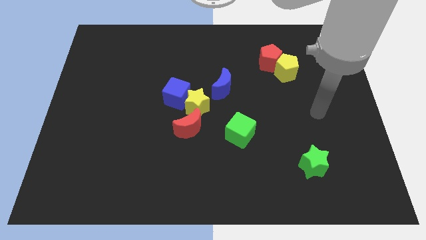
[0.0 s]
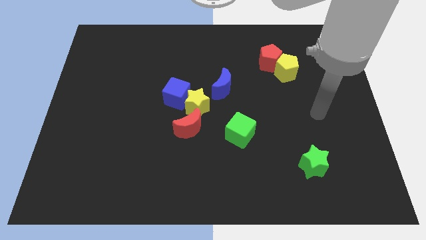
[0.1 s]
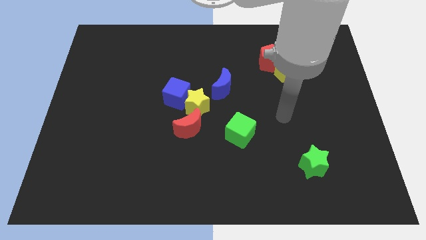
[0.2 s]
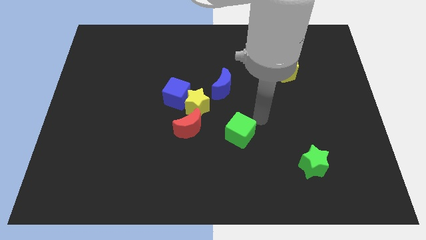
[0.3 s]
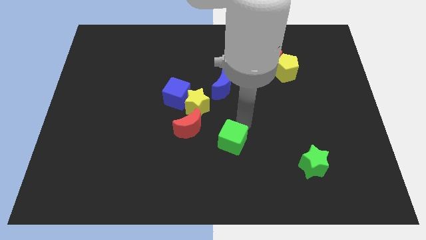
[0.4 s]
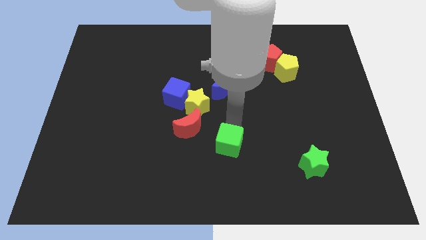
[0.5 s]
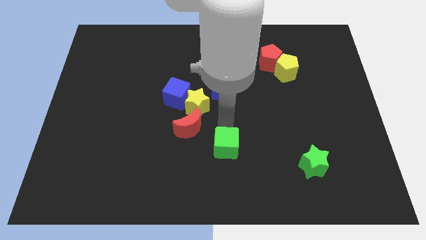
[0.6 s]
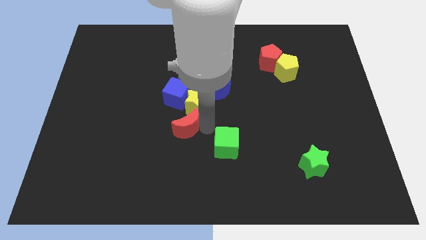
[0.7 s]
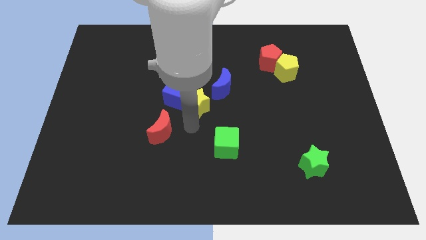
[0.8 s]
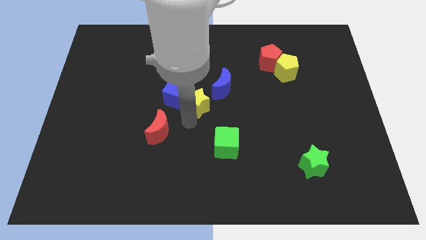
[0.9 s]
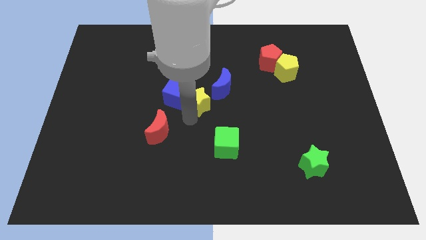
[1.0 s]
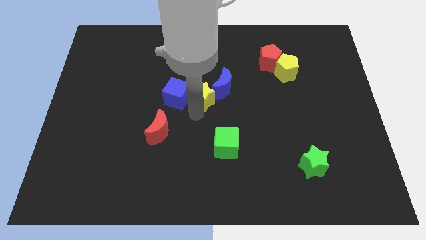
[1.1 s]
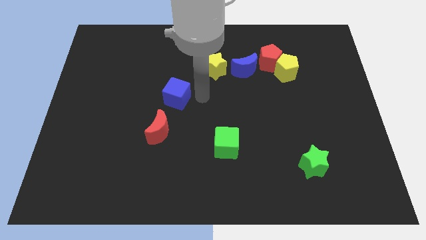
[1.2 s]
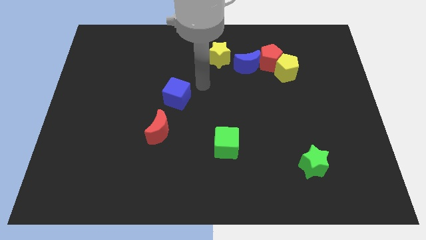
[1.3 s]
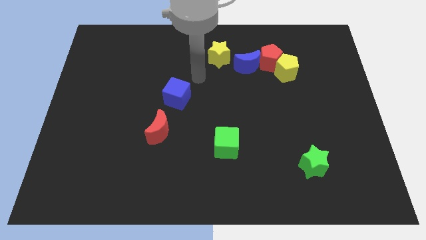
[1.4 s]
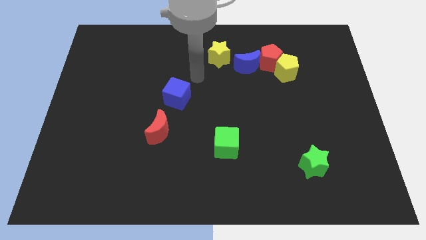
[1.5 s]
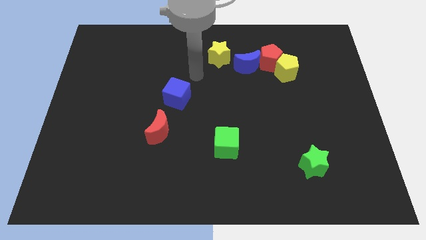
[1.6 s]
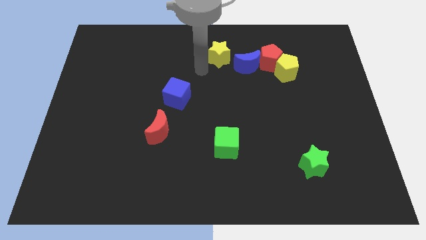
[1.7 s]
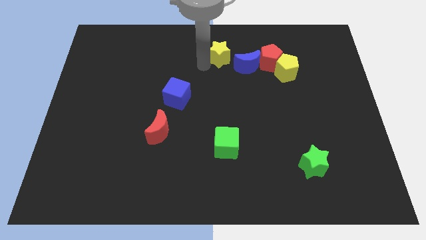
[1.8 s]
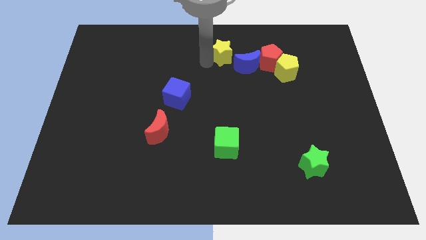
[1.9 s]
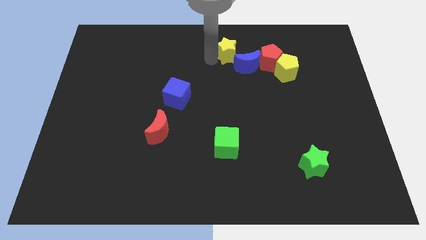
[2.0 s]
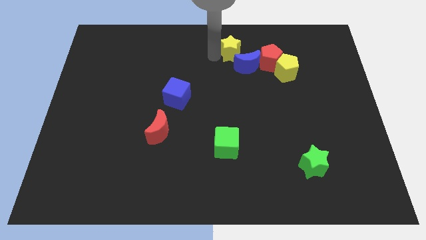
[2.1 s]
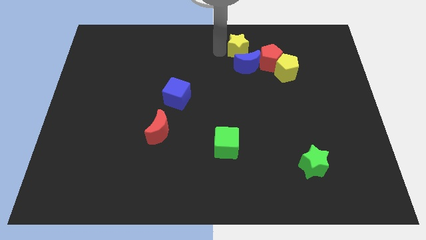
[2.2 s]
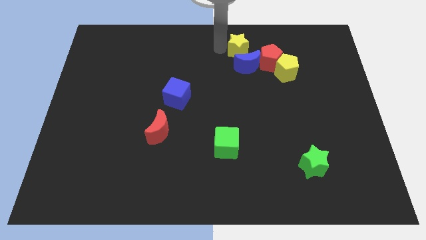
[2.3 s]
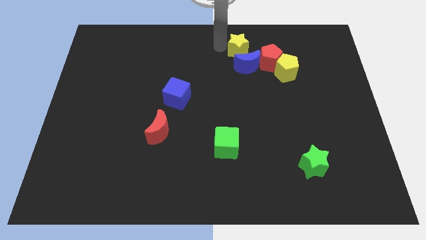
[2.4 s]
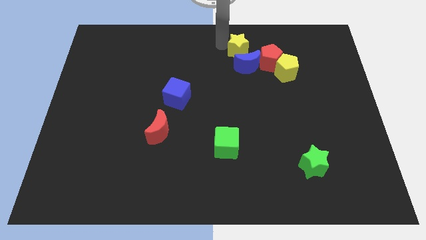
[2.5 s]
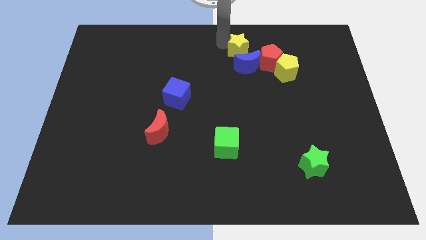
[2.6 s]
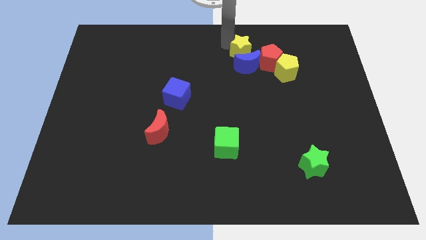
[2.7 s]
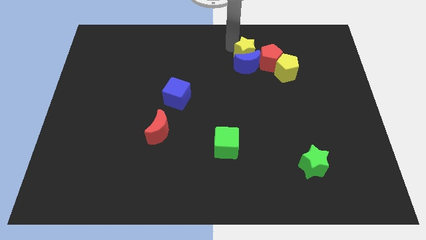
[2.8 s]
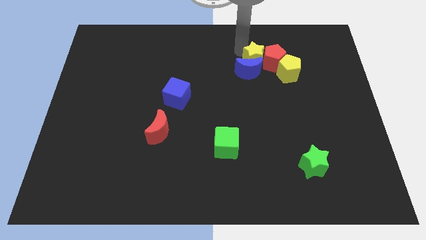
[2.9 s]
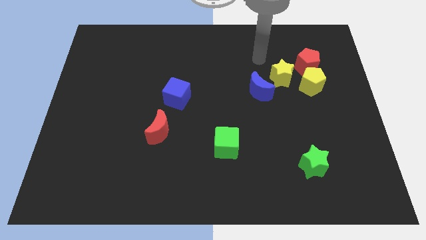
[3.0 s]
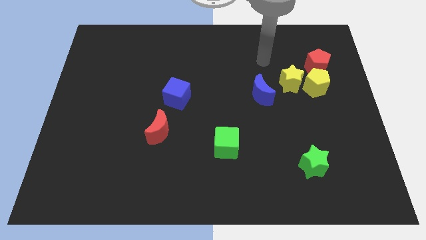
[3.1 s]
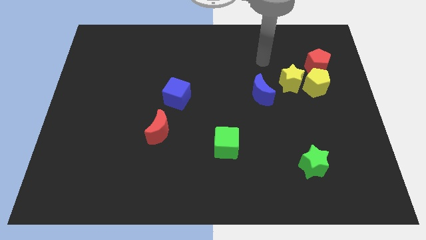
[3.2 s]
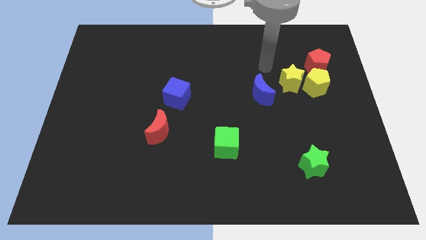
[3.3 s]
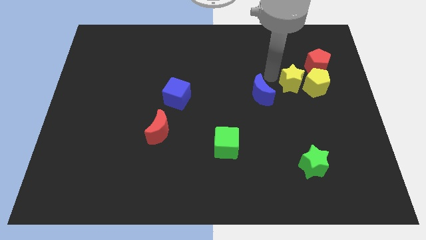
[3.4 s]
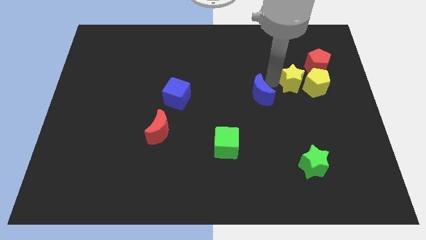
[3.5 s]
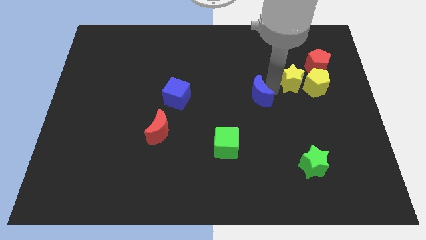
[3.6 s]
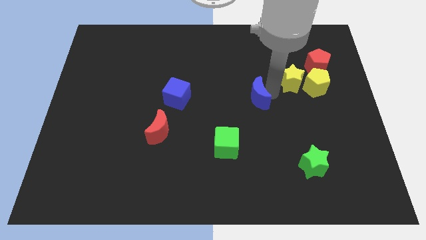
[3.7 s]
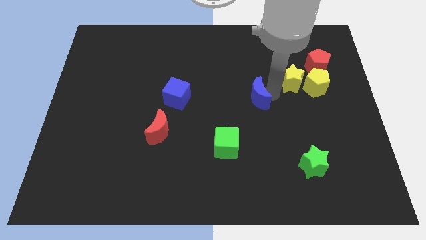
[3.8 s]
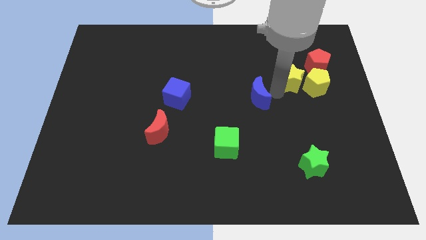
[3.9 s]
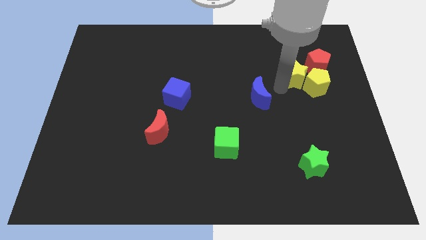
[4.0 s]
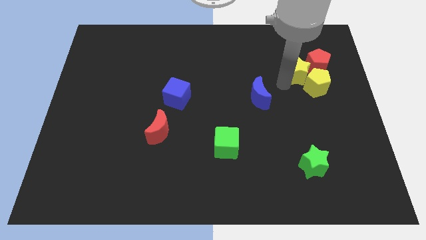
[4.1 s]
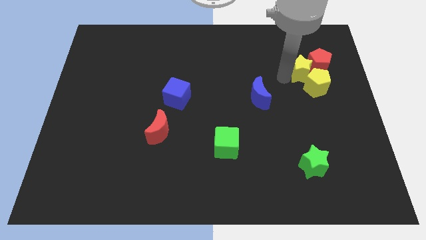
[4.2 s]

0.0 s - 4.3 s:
slide the yellow star close to the red pentagon

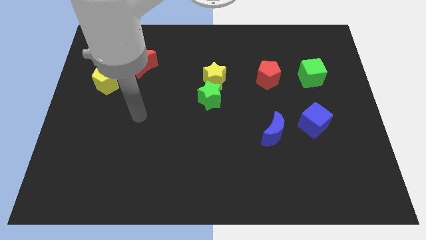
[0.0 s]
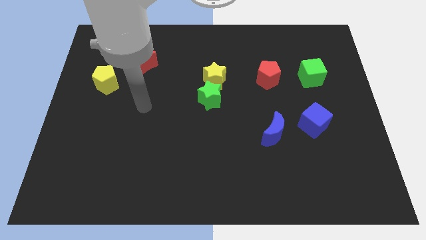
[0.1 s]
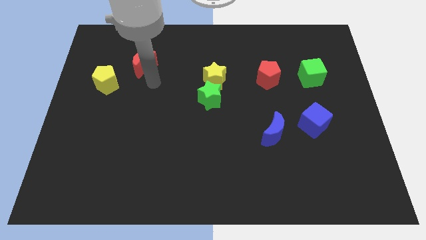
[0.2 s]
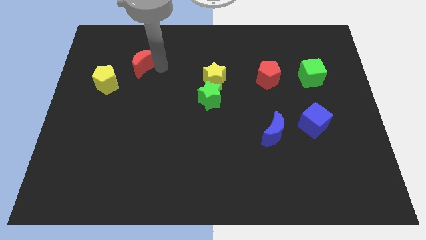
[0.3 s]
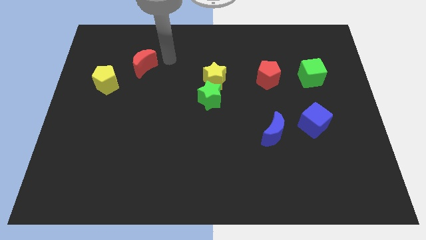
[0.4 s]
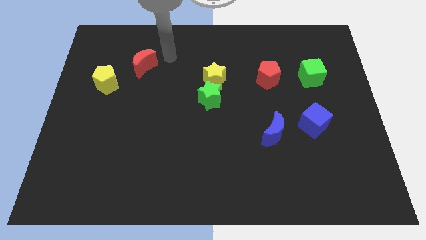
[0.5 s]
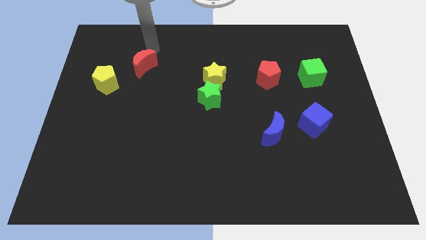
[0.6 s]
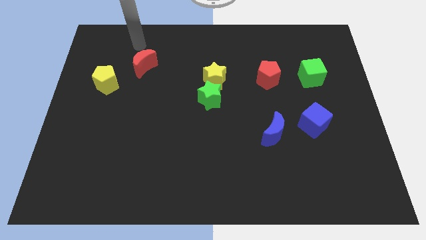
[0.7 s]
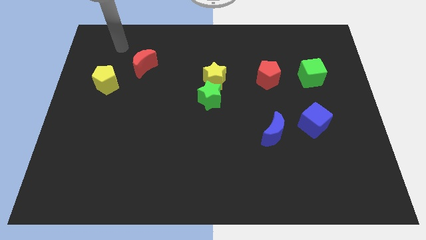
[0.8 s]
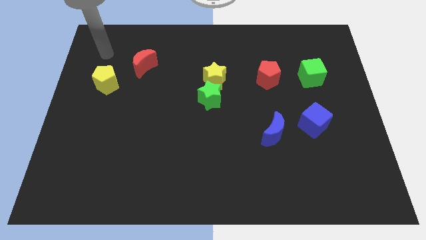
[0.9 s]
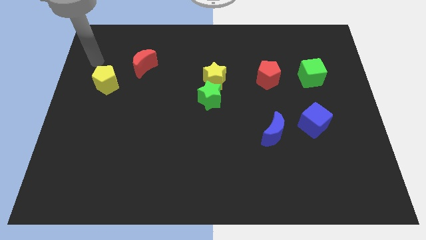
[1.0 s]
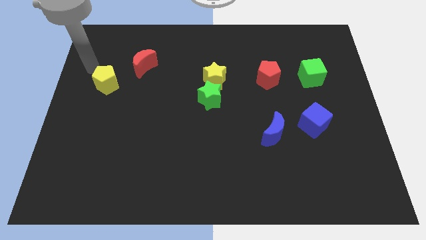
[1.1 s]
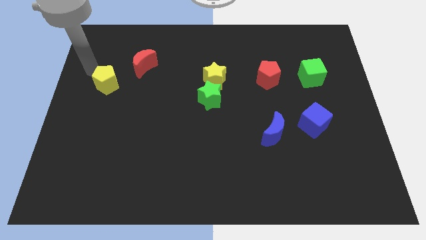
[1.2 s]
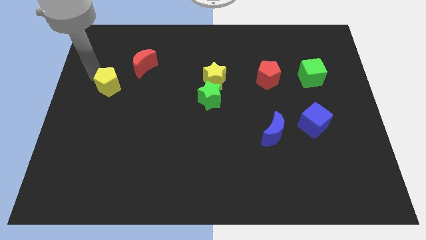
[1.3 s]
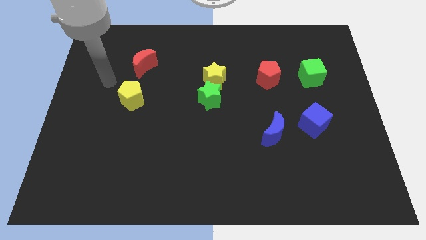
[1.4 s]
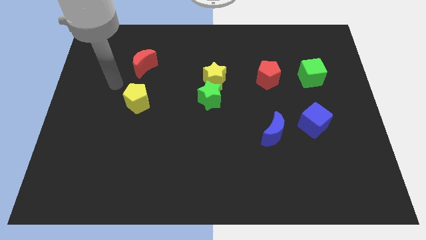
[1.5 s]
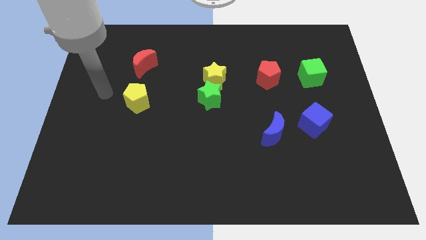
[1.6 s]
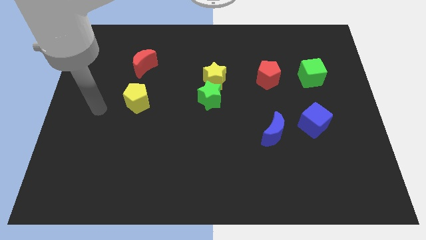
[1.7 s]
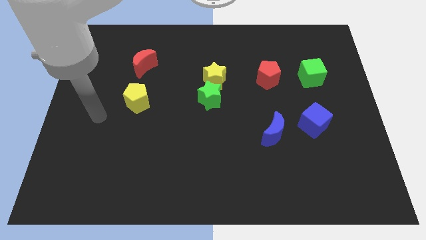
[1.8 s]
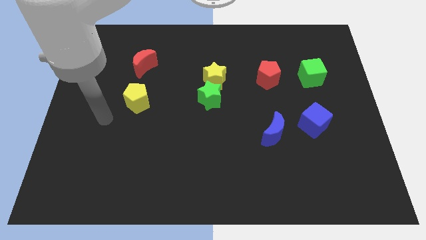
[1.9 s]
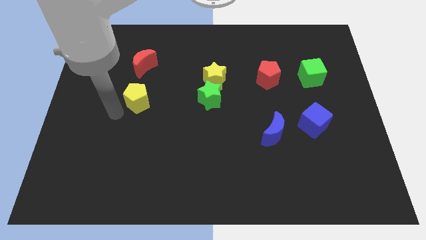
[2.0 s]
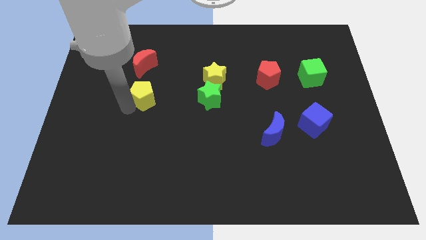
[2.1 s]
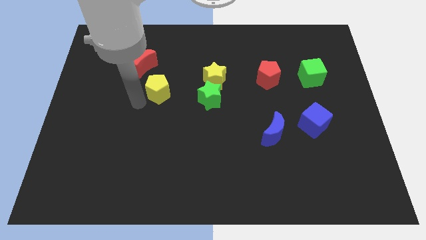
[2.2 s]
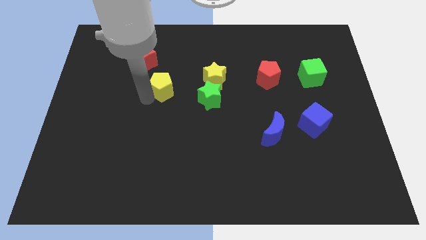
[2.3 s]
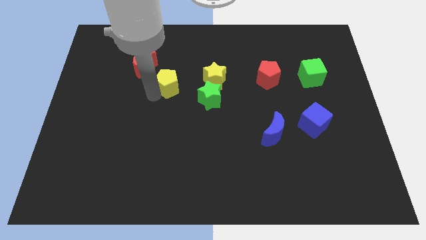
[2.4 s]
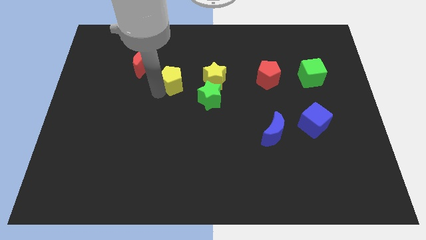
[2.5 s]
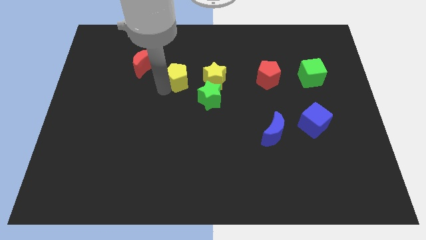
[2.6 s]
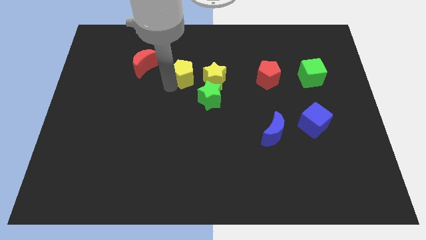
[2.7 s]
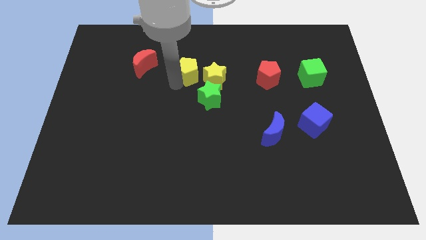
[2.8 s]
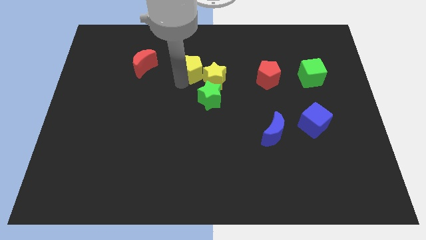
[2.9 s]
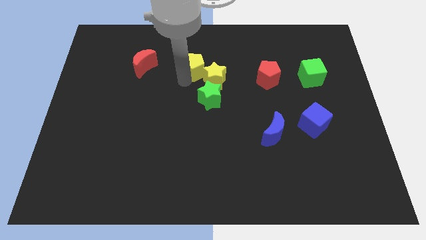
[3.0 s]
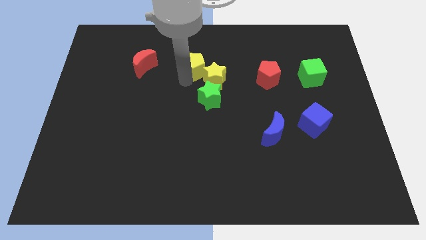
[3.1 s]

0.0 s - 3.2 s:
move the yellow pentagon next to the yellow star

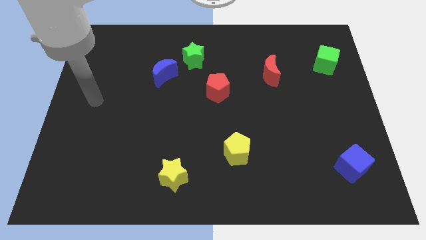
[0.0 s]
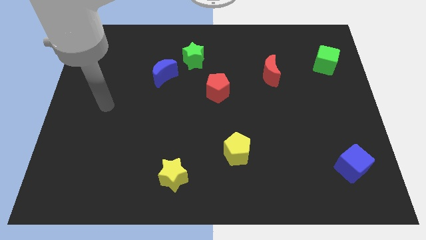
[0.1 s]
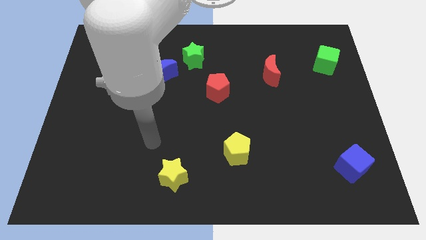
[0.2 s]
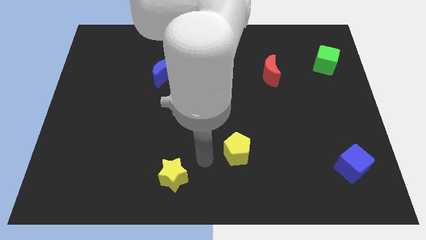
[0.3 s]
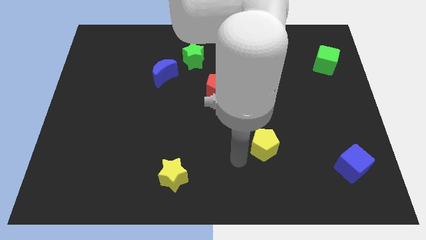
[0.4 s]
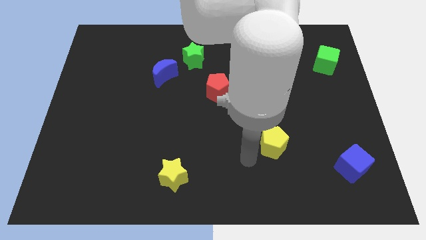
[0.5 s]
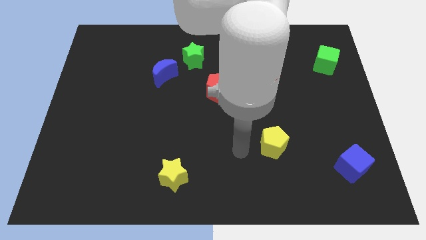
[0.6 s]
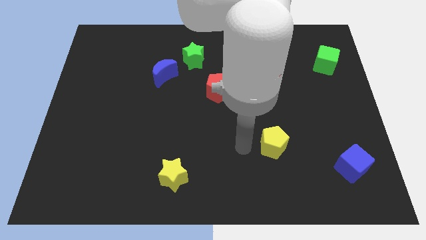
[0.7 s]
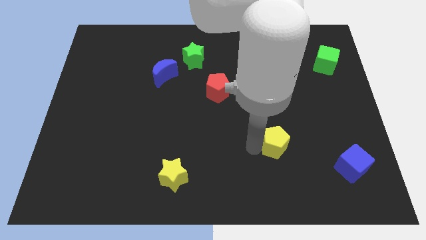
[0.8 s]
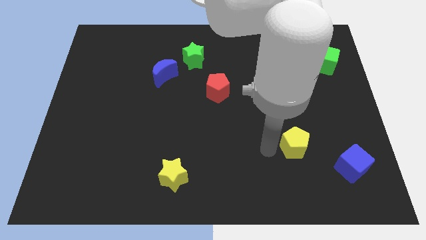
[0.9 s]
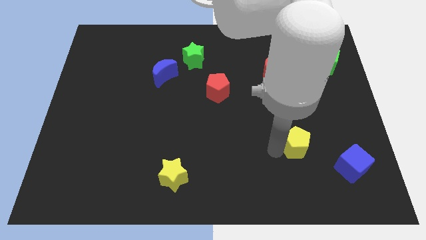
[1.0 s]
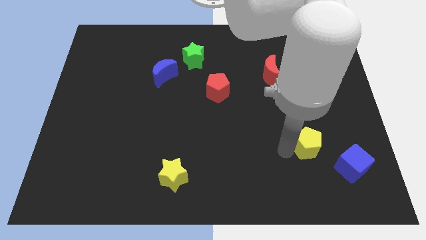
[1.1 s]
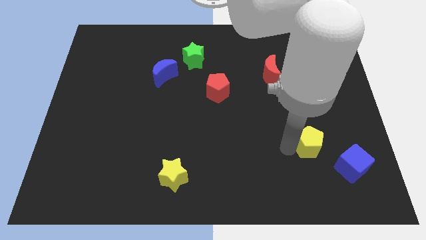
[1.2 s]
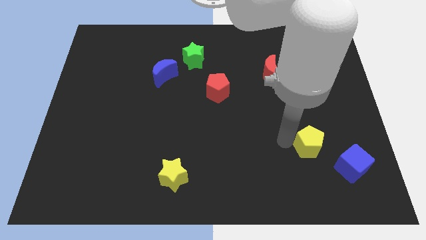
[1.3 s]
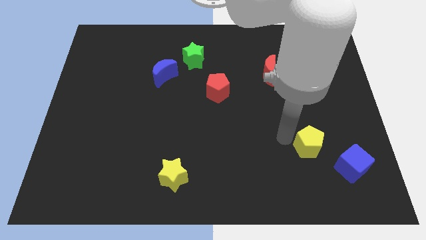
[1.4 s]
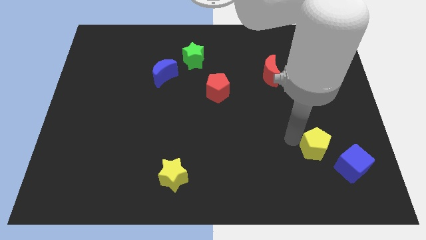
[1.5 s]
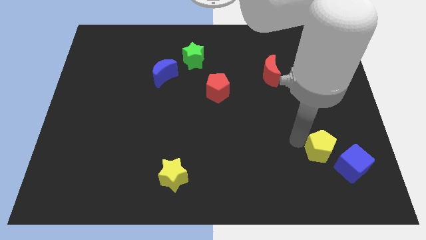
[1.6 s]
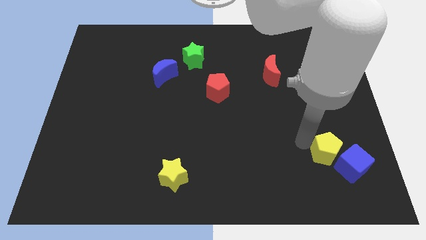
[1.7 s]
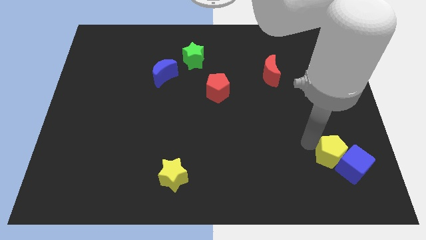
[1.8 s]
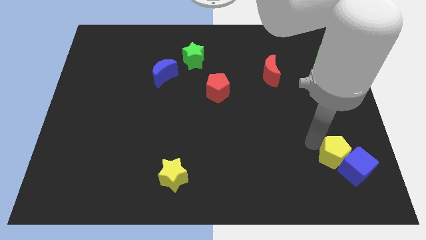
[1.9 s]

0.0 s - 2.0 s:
put the yellow pentagon towards the blue cube
